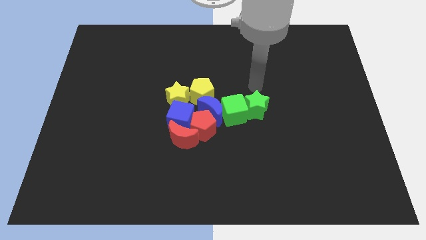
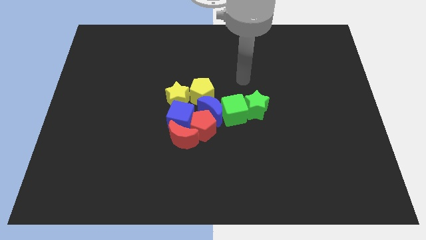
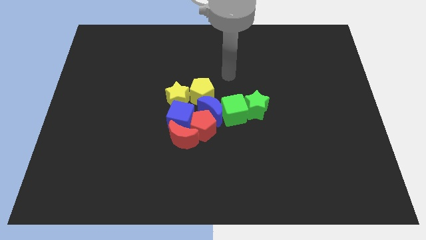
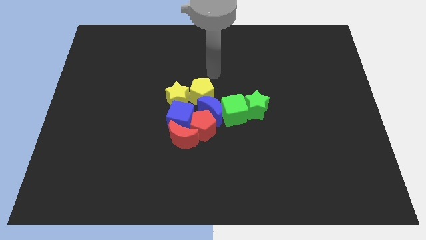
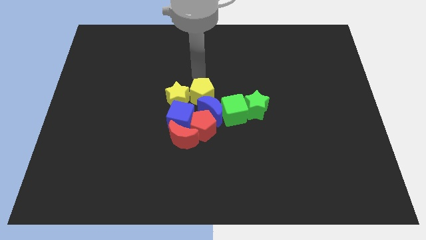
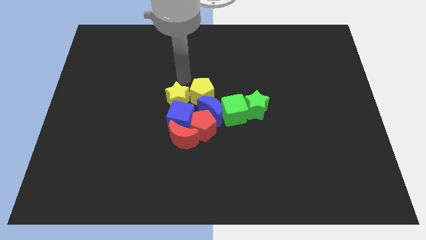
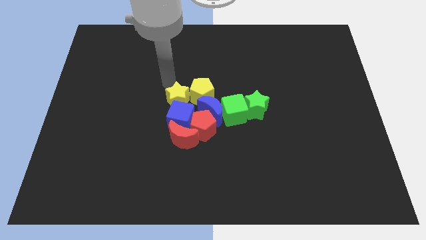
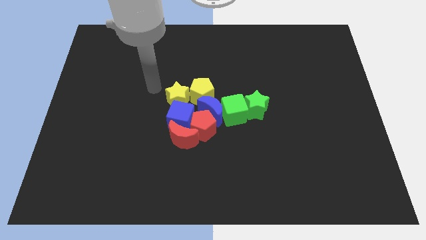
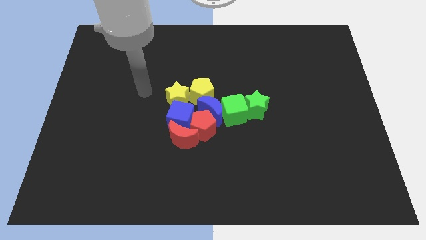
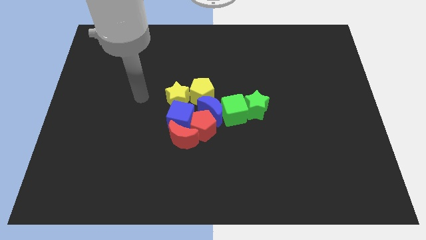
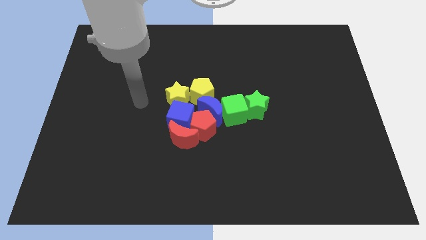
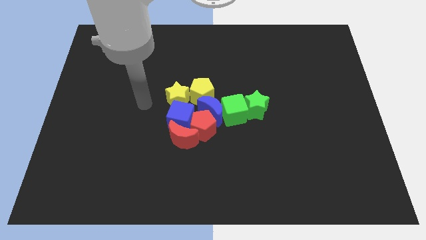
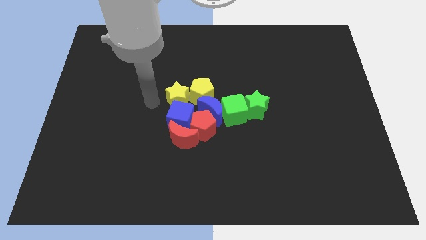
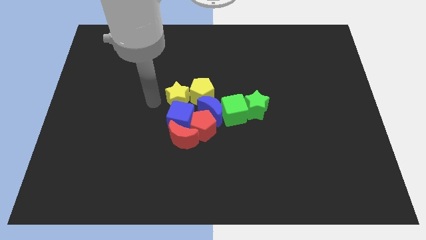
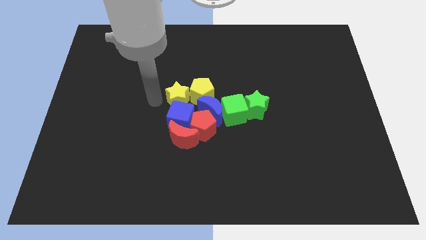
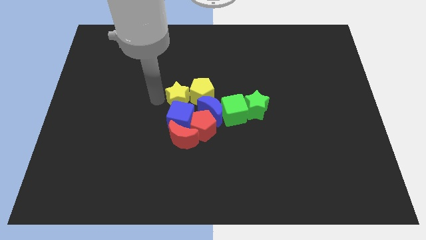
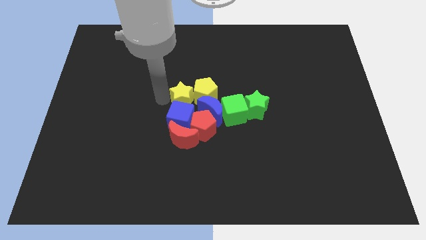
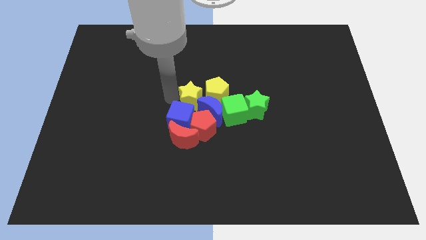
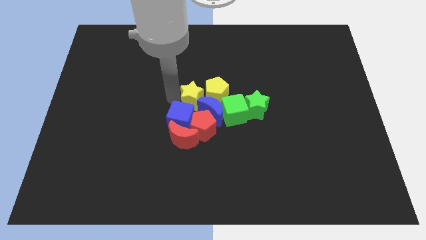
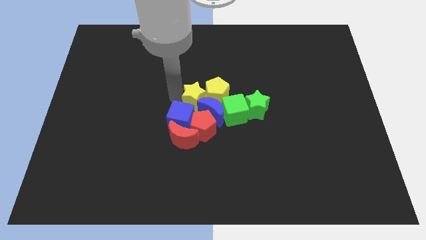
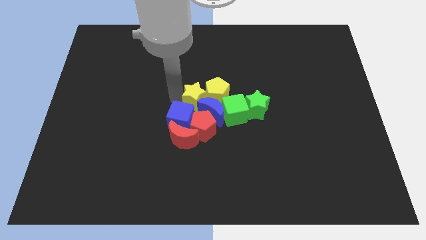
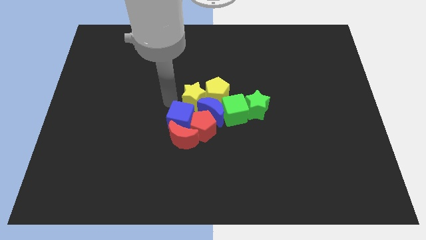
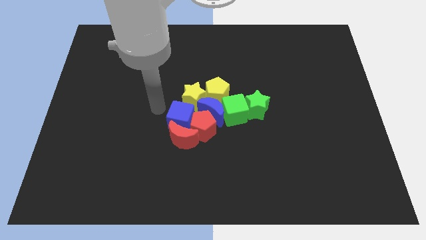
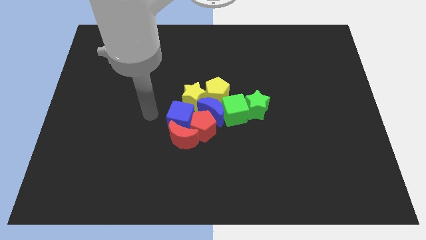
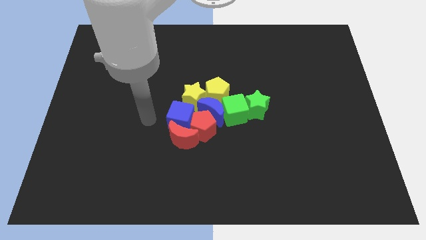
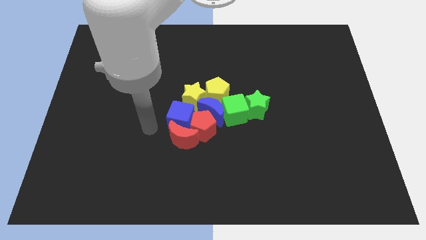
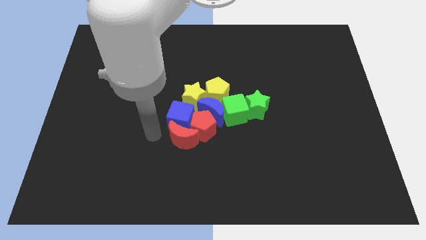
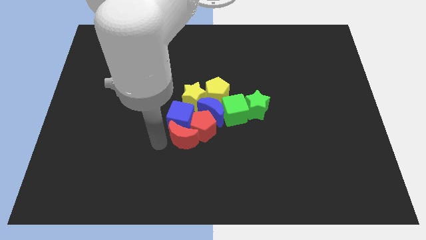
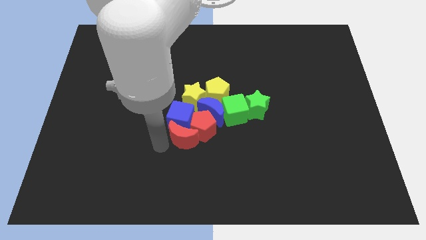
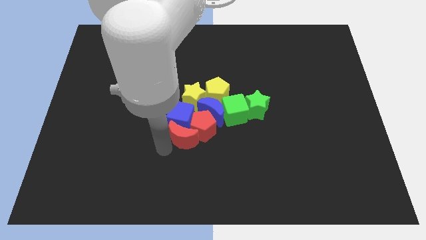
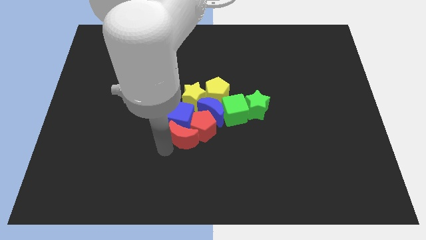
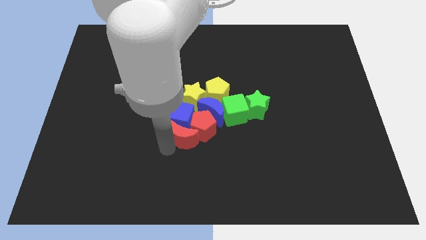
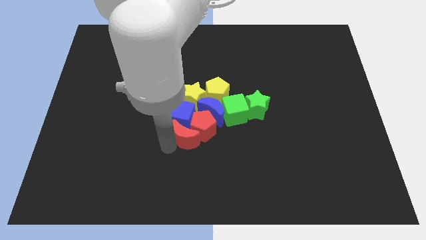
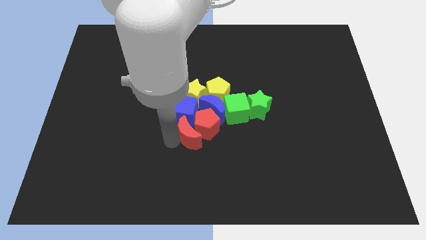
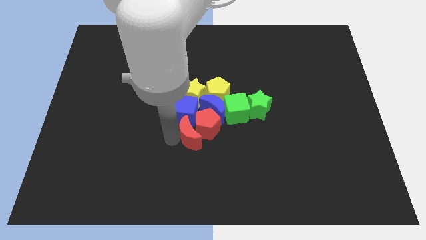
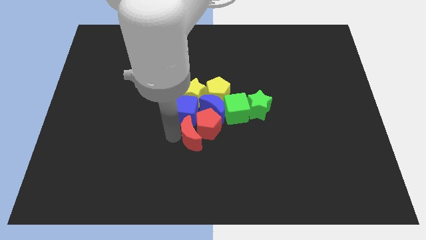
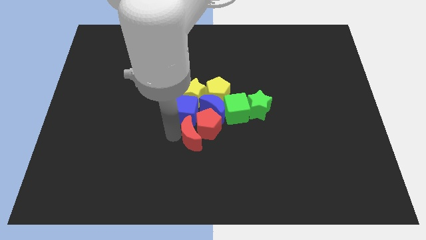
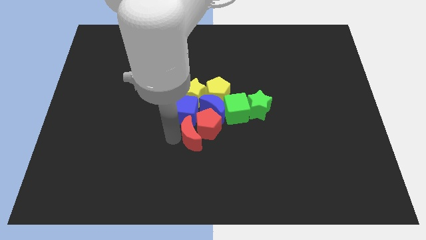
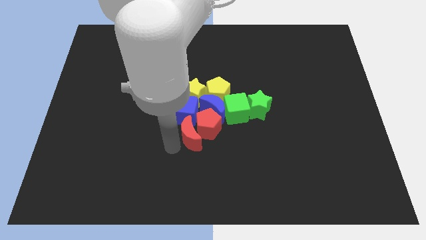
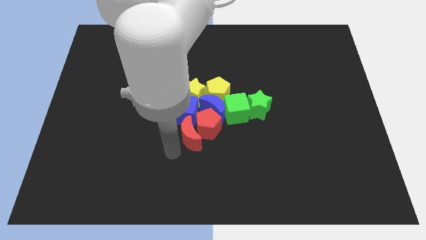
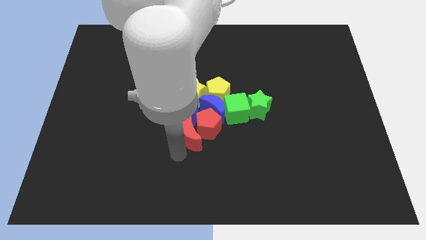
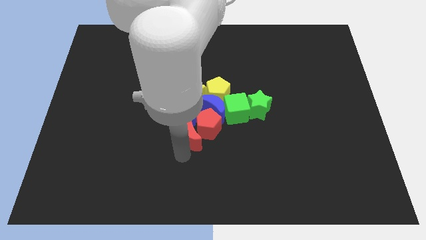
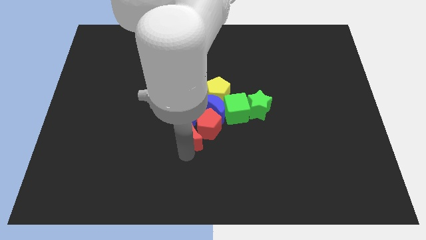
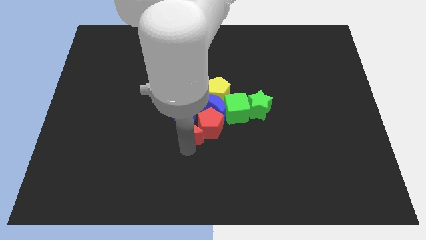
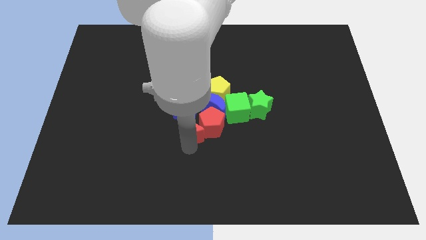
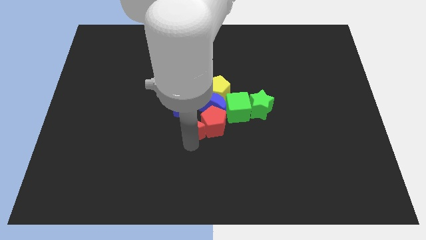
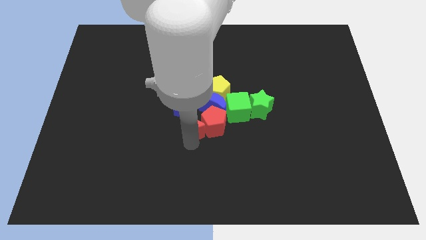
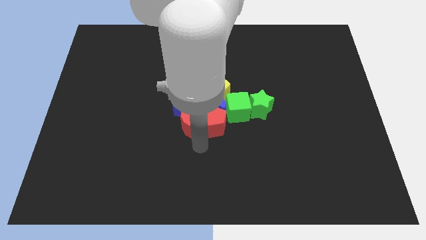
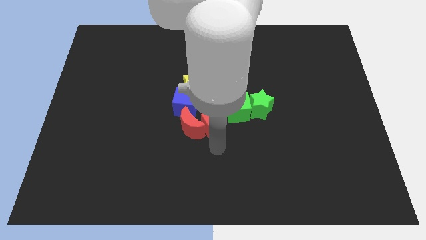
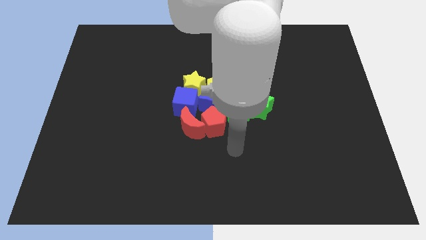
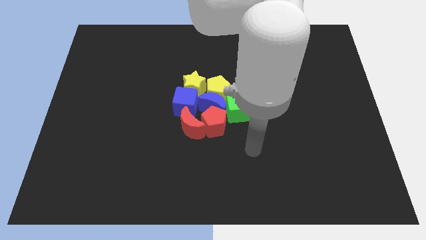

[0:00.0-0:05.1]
adjust the group of blocks at the center of the board

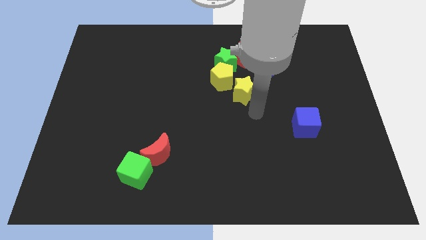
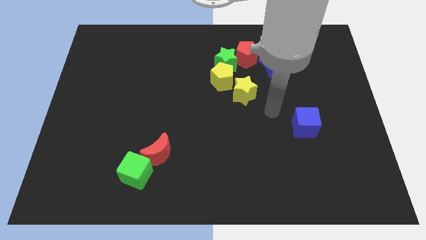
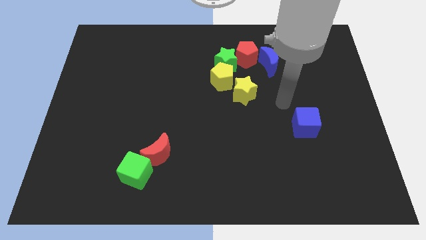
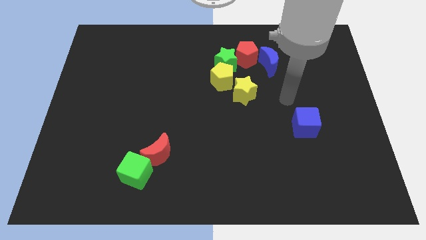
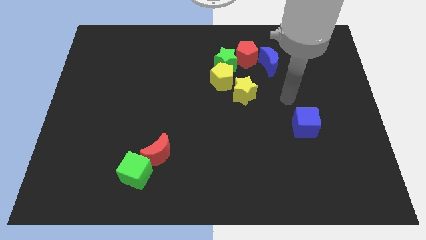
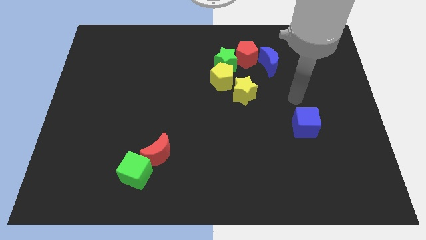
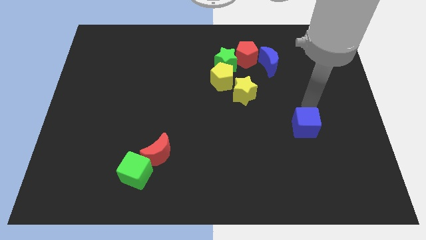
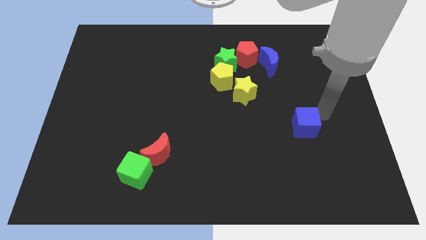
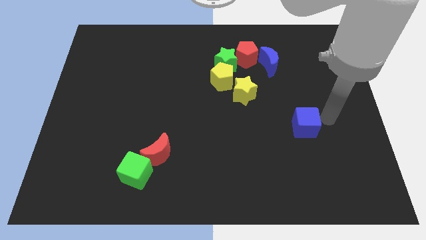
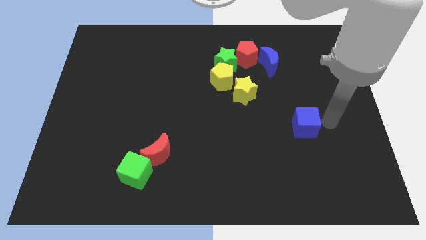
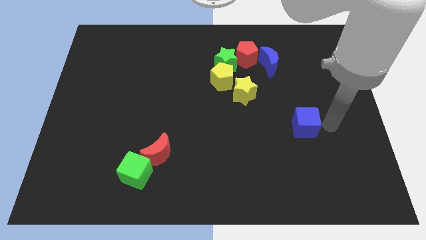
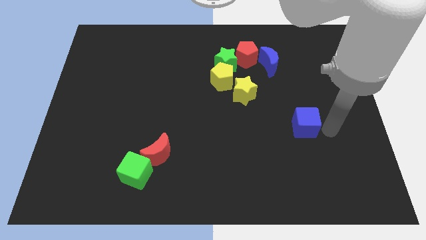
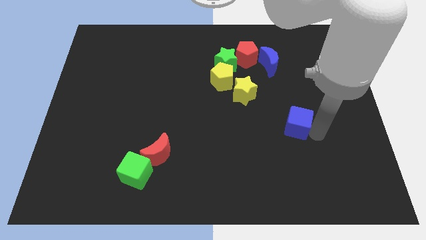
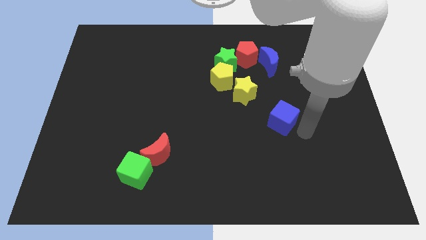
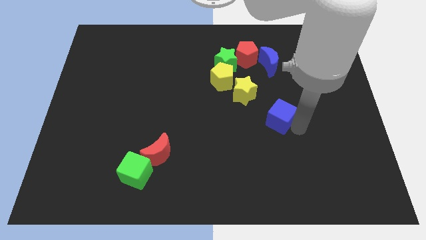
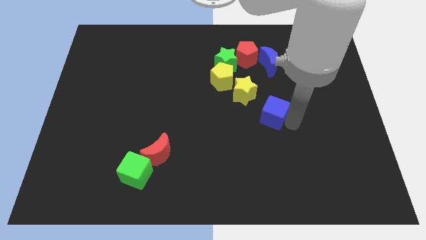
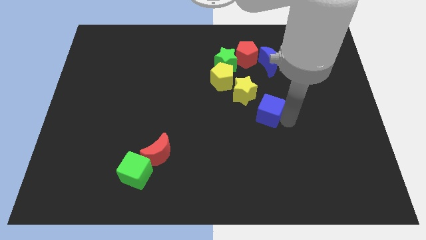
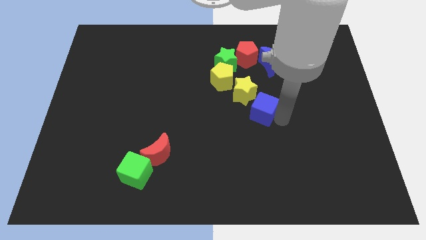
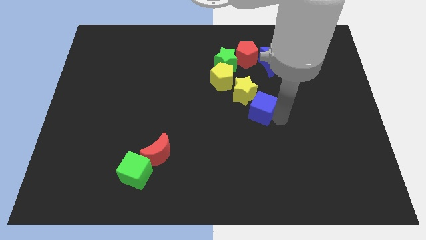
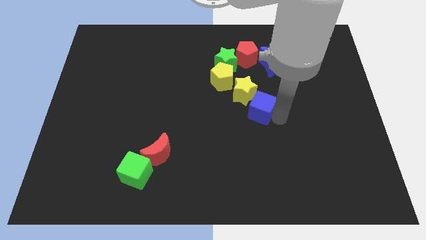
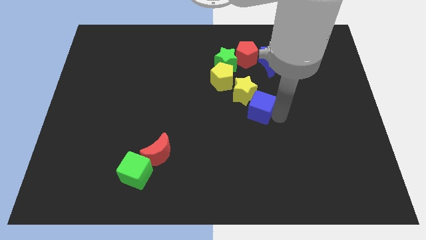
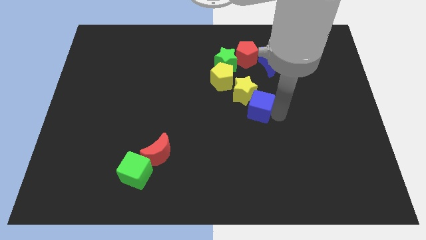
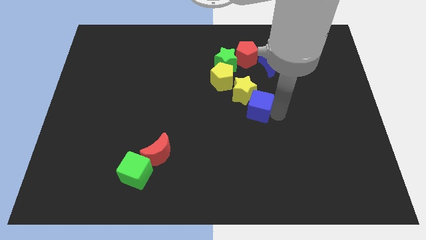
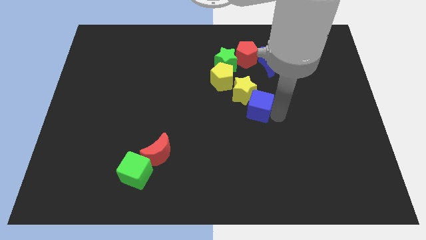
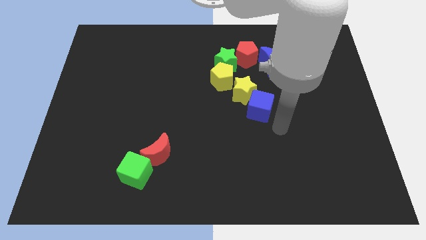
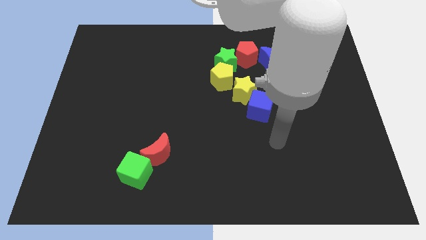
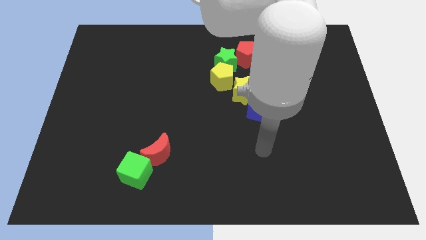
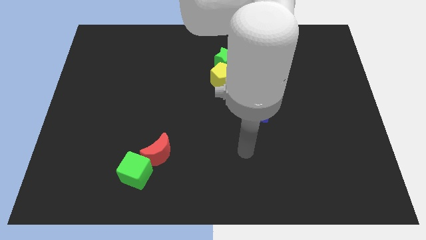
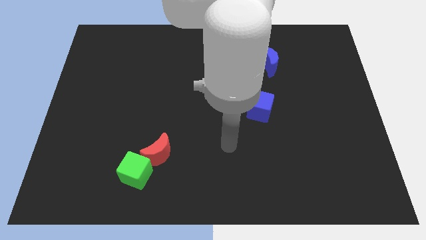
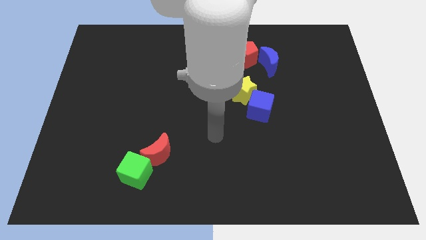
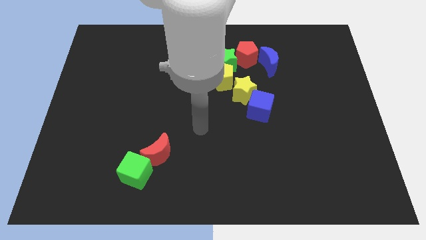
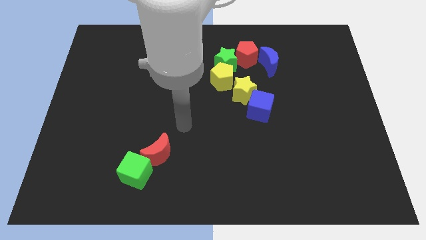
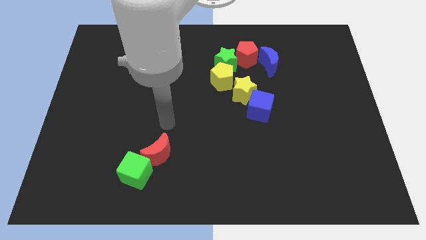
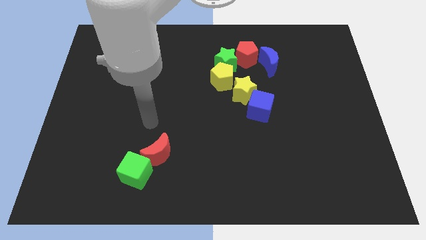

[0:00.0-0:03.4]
move the blue cube into the yellow star and go away

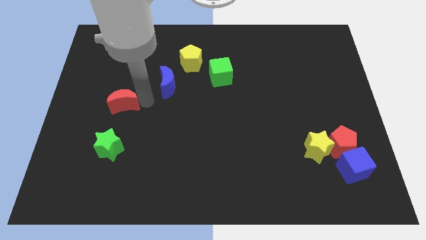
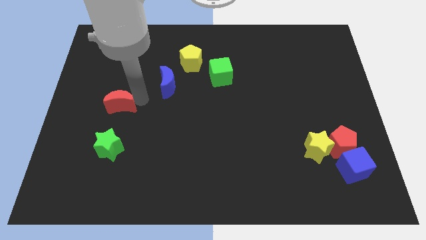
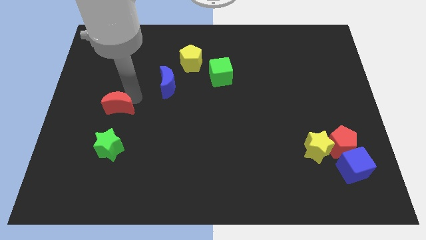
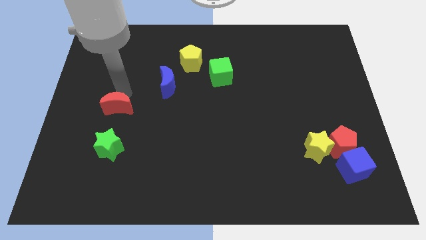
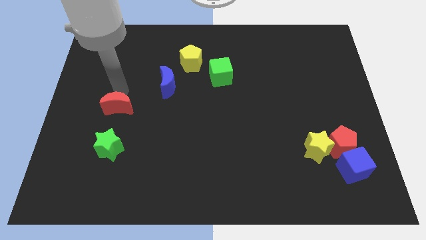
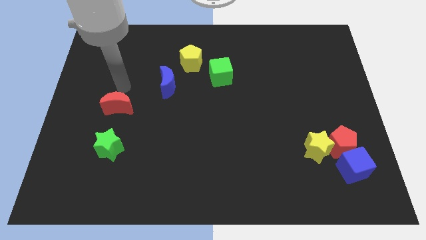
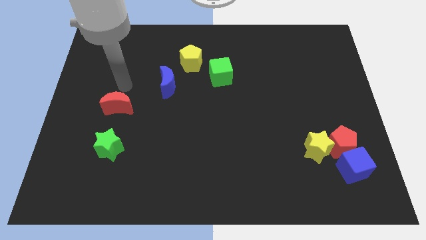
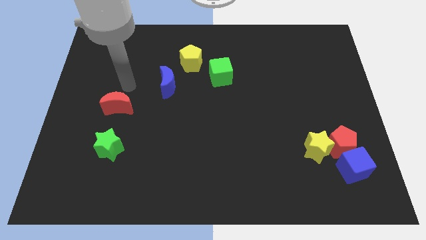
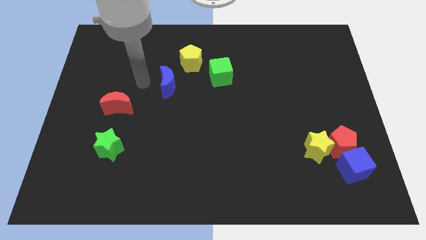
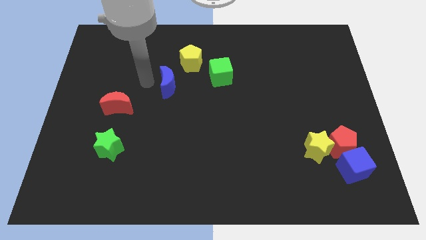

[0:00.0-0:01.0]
slightly touch the red crescent
